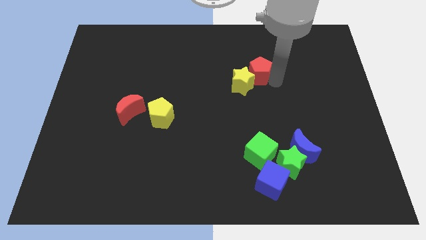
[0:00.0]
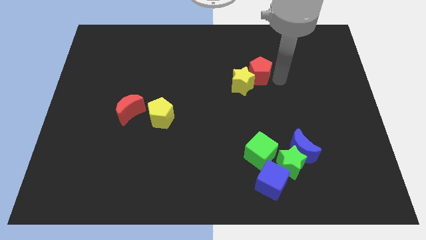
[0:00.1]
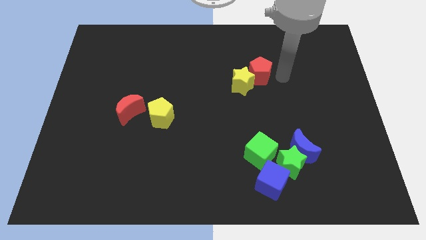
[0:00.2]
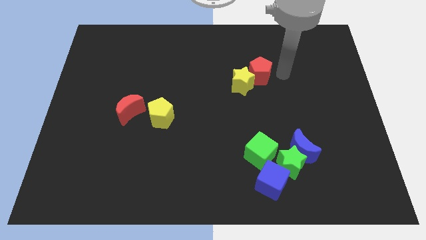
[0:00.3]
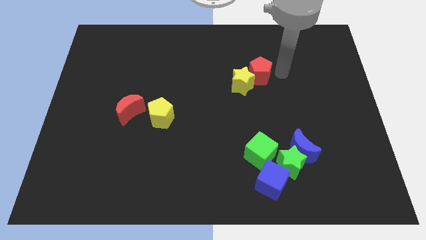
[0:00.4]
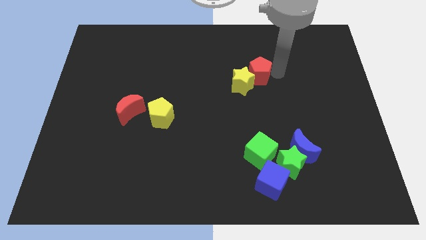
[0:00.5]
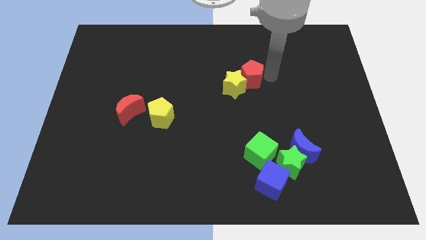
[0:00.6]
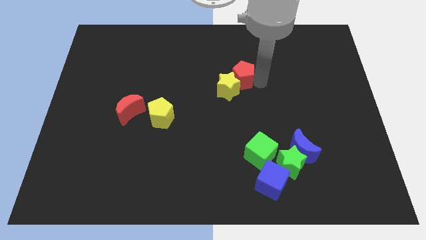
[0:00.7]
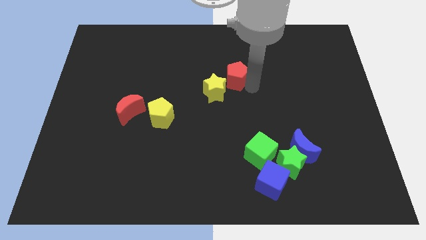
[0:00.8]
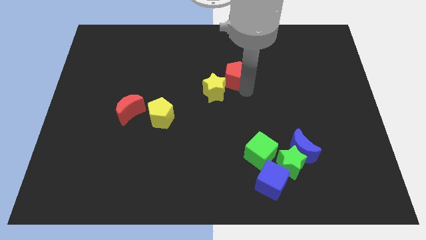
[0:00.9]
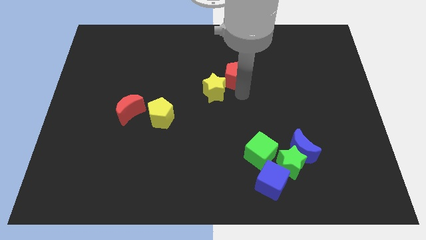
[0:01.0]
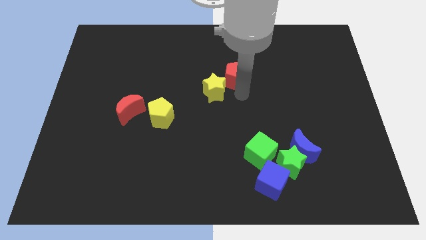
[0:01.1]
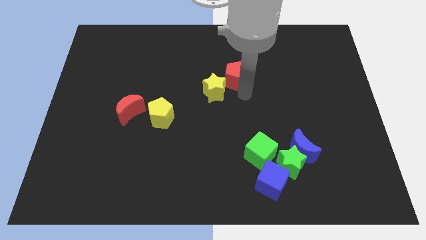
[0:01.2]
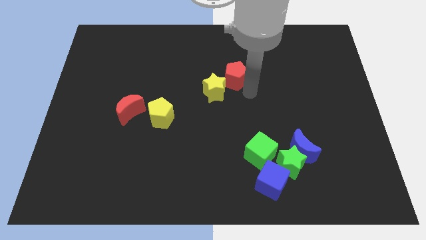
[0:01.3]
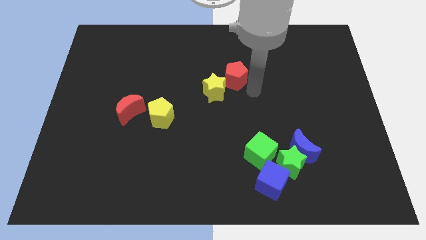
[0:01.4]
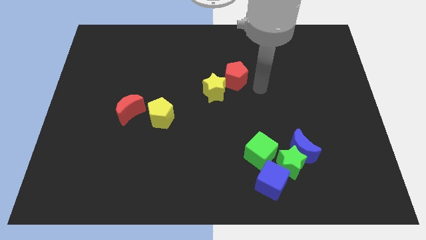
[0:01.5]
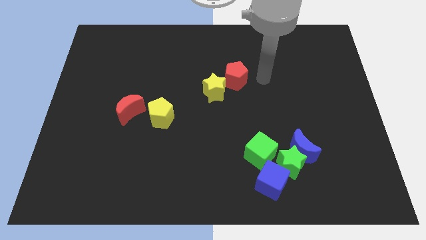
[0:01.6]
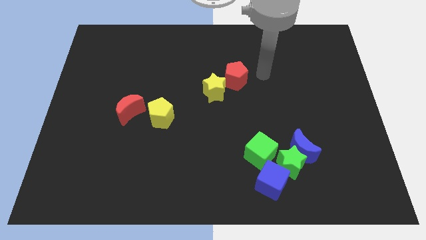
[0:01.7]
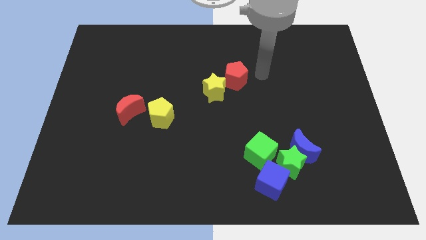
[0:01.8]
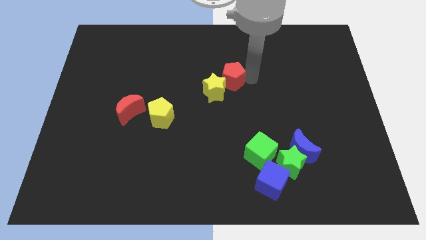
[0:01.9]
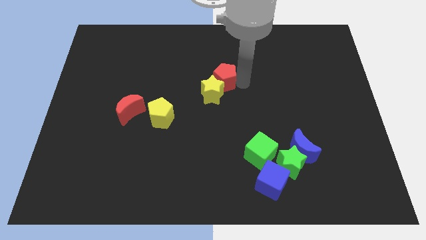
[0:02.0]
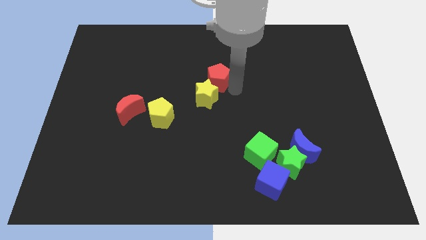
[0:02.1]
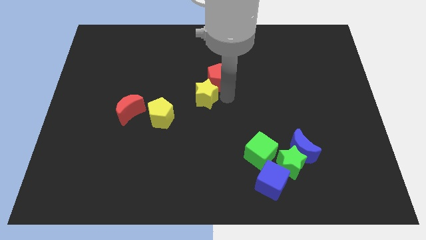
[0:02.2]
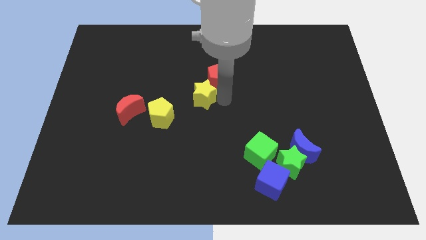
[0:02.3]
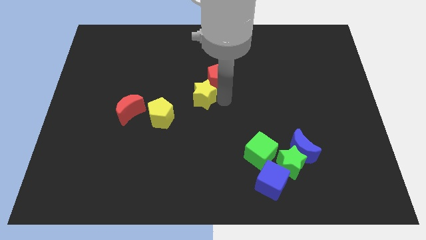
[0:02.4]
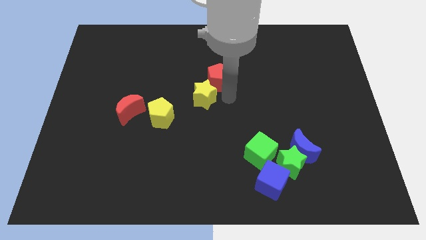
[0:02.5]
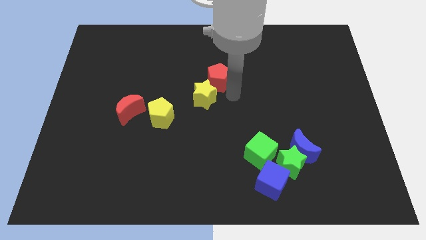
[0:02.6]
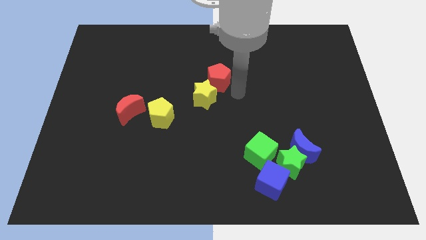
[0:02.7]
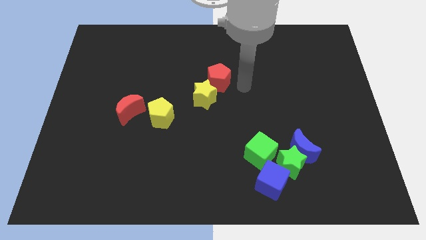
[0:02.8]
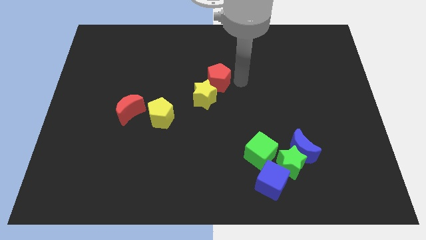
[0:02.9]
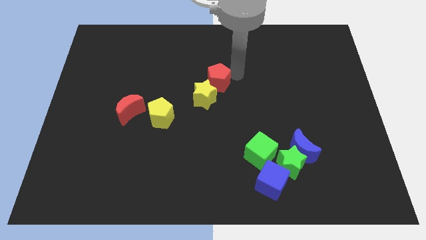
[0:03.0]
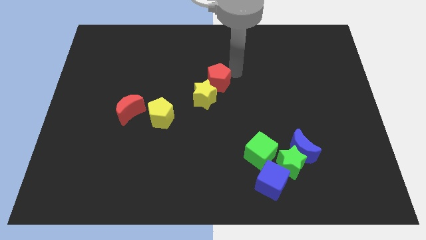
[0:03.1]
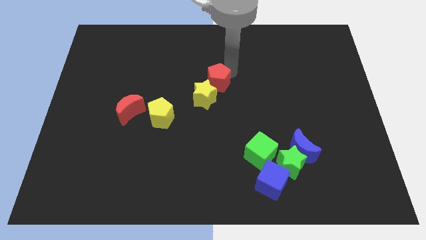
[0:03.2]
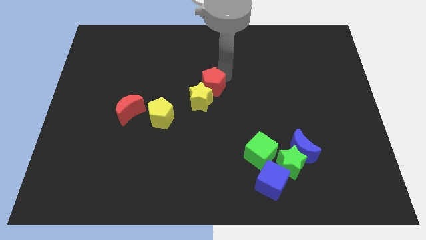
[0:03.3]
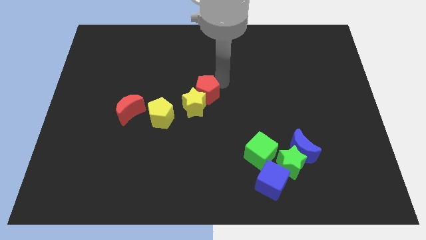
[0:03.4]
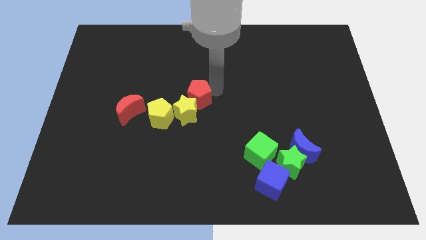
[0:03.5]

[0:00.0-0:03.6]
move the yellow star and the red pentagon towards the center

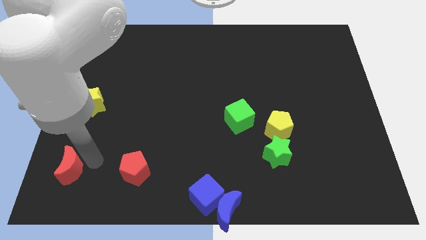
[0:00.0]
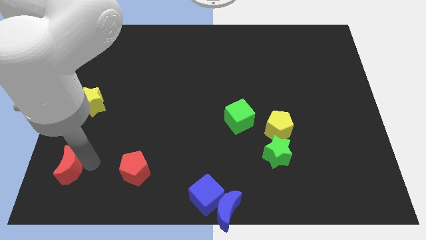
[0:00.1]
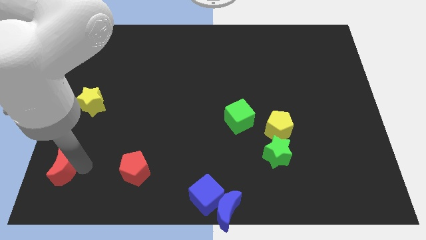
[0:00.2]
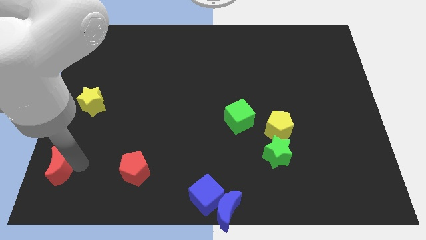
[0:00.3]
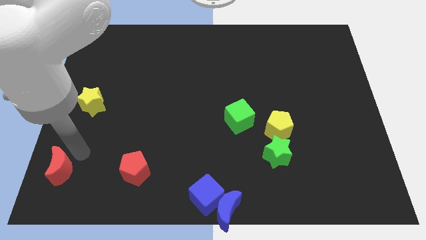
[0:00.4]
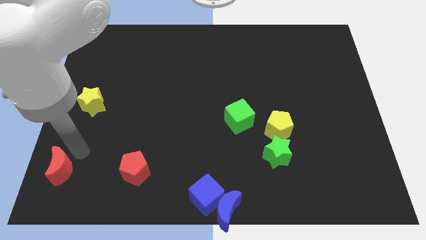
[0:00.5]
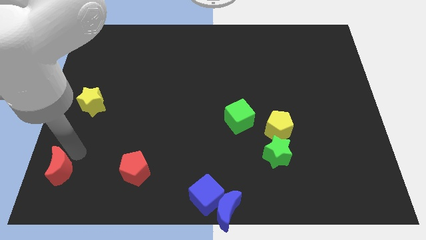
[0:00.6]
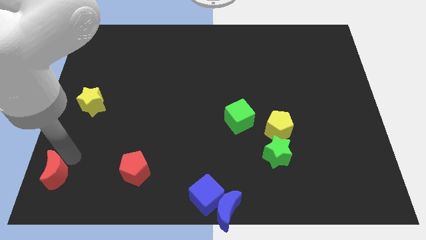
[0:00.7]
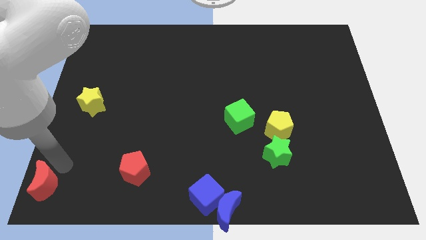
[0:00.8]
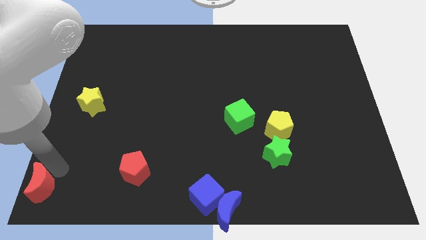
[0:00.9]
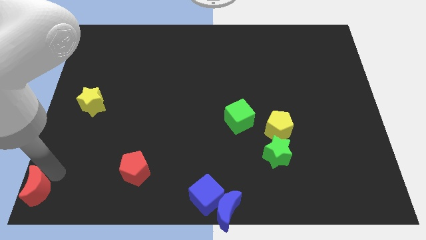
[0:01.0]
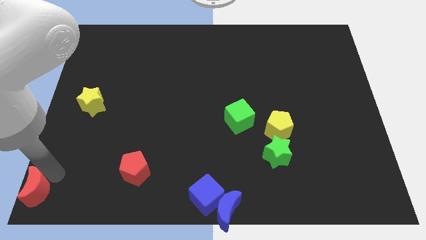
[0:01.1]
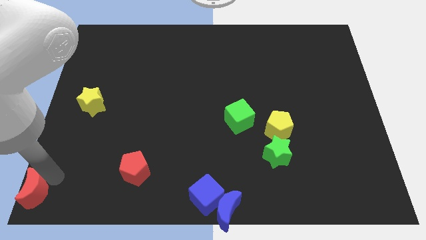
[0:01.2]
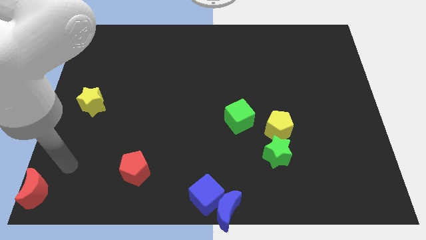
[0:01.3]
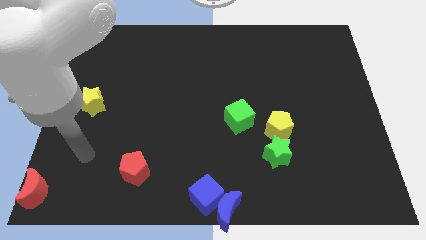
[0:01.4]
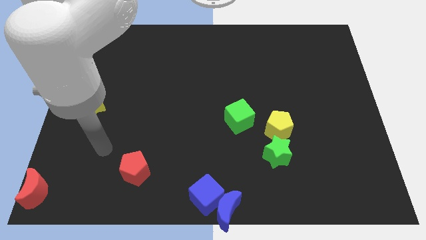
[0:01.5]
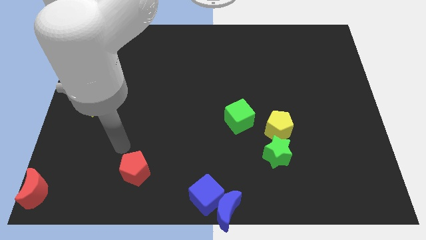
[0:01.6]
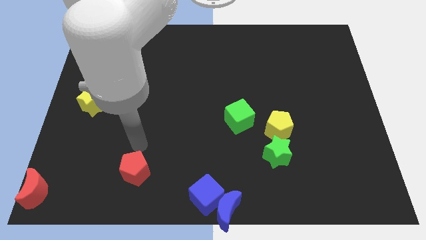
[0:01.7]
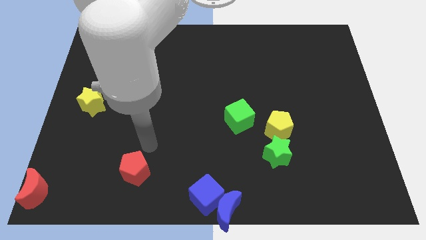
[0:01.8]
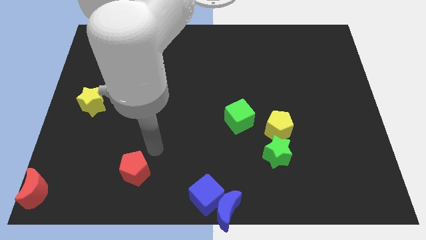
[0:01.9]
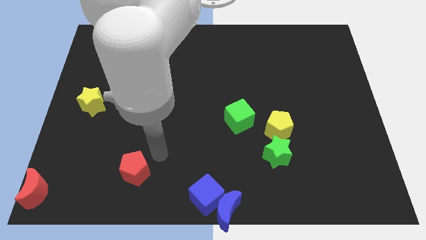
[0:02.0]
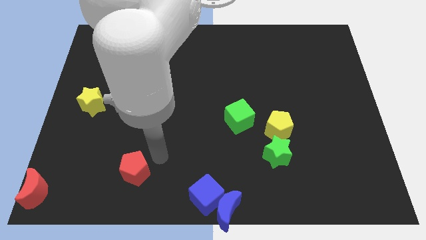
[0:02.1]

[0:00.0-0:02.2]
place red moon in the bottom left corner

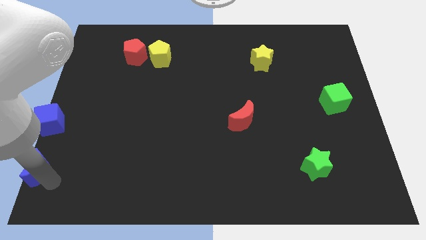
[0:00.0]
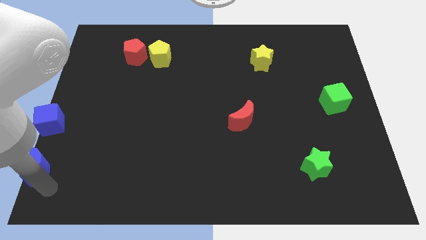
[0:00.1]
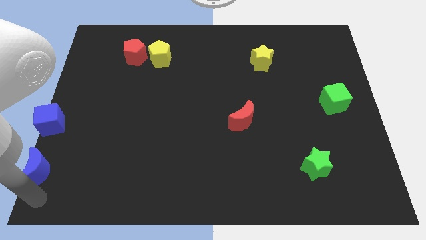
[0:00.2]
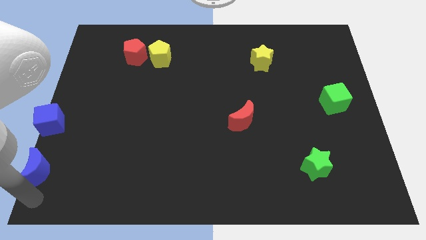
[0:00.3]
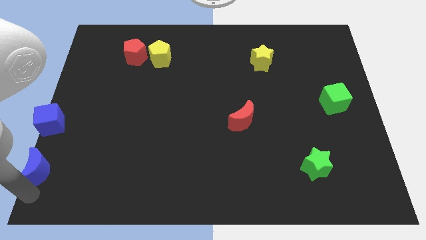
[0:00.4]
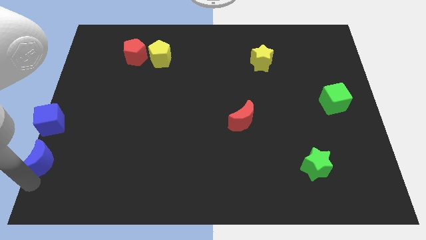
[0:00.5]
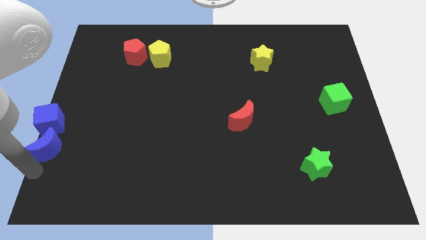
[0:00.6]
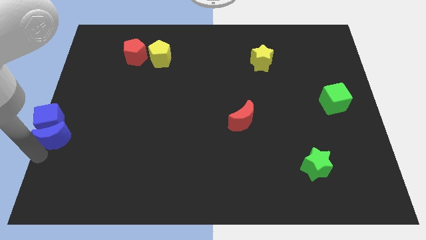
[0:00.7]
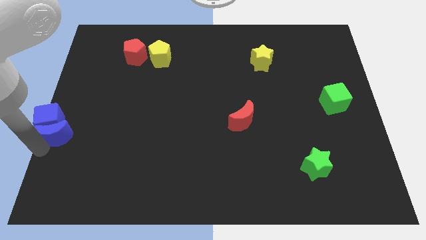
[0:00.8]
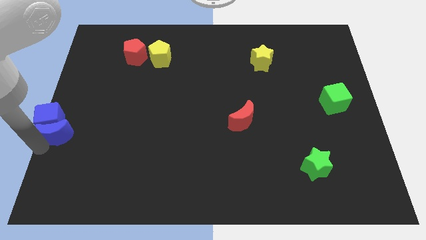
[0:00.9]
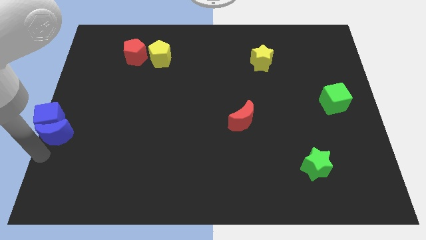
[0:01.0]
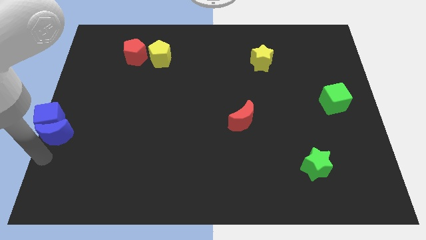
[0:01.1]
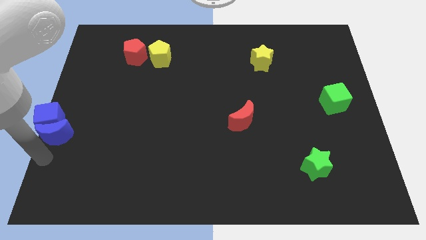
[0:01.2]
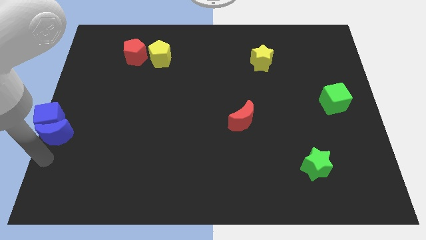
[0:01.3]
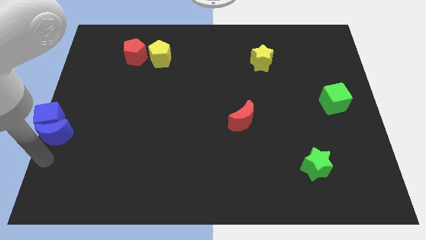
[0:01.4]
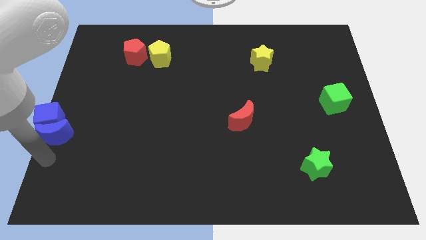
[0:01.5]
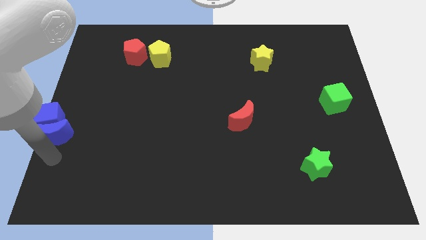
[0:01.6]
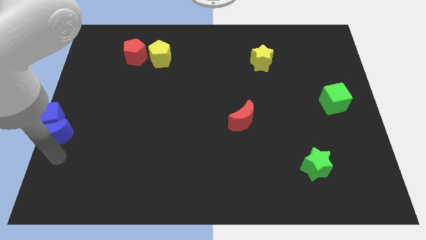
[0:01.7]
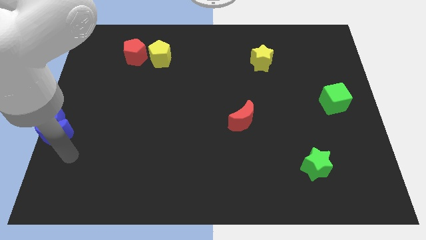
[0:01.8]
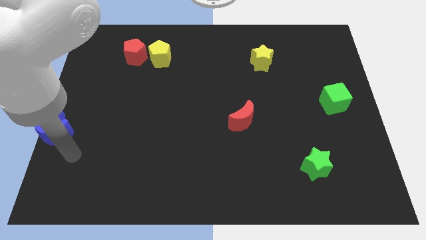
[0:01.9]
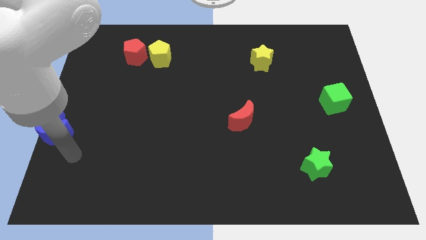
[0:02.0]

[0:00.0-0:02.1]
move the blue moon below the blue cube

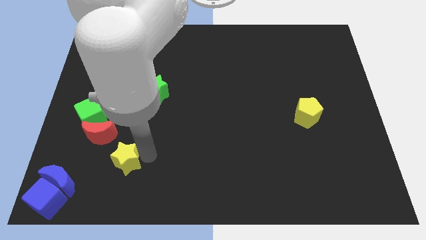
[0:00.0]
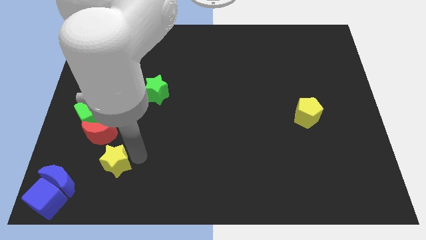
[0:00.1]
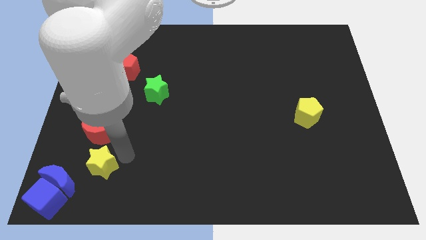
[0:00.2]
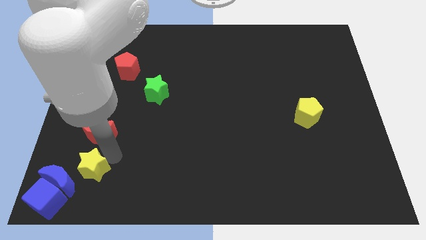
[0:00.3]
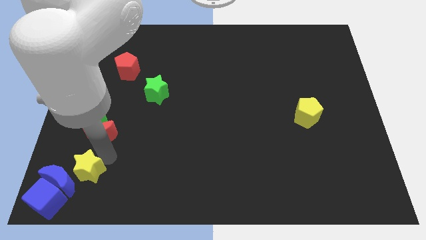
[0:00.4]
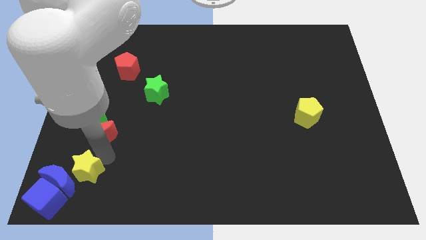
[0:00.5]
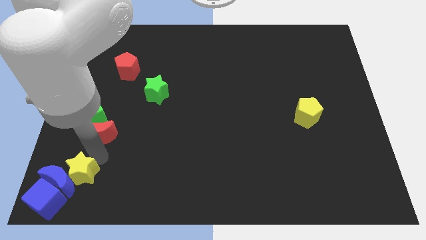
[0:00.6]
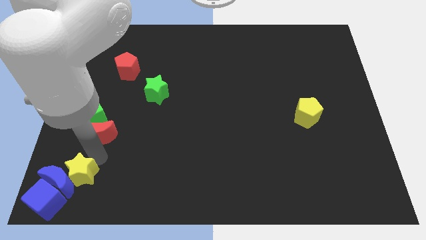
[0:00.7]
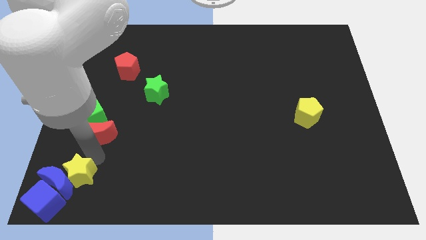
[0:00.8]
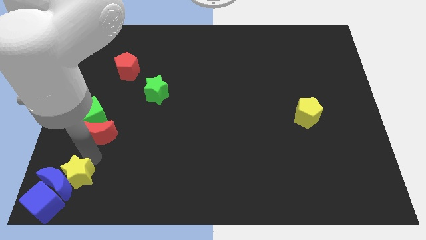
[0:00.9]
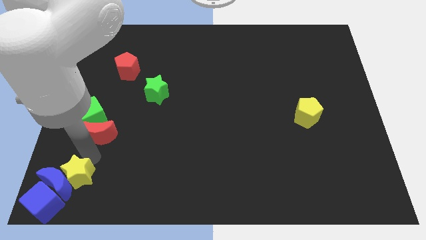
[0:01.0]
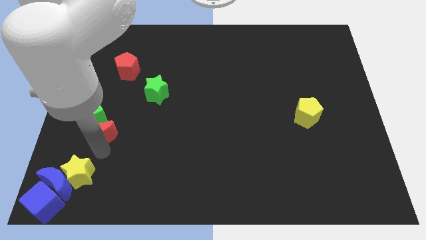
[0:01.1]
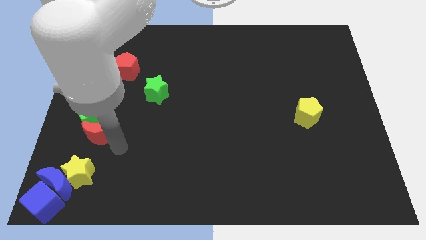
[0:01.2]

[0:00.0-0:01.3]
place the yellow star on top of the blue crescent to form a diagonal line
